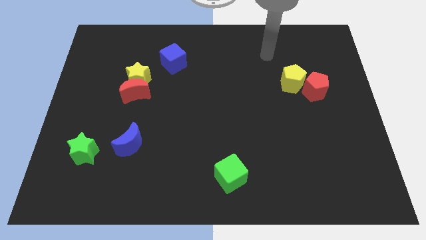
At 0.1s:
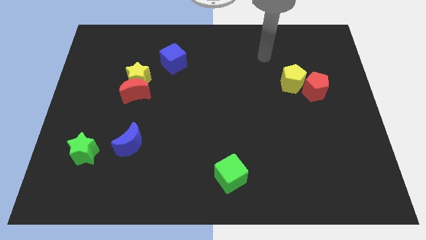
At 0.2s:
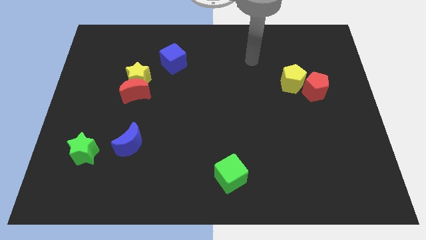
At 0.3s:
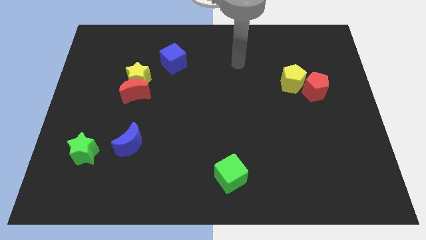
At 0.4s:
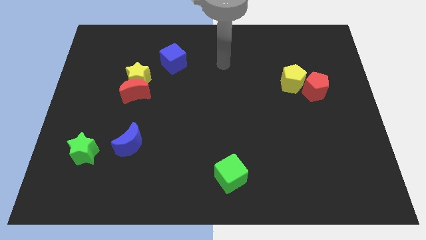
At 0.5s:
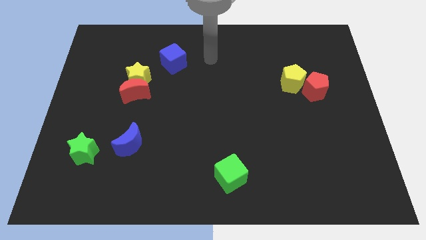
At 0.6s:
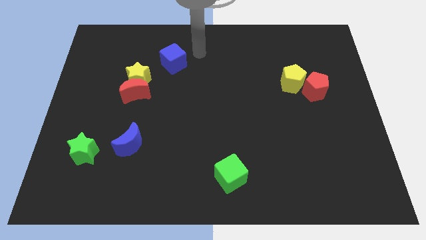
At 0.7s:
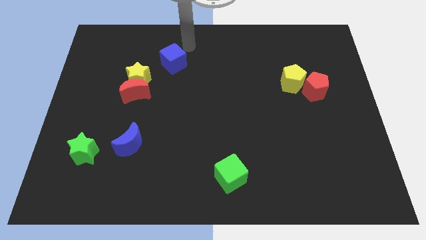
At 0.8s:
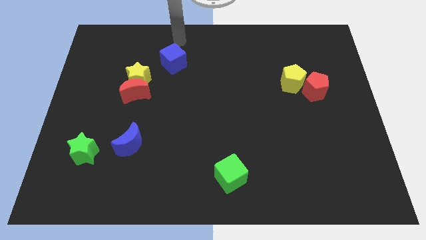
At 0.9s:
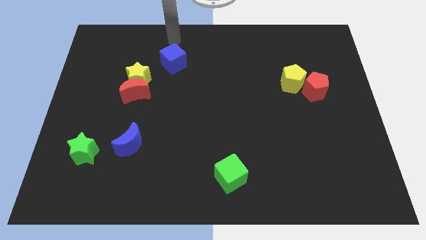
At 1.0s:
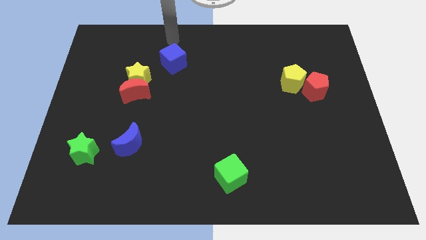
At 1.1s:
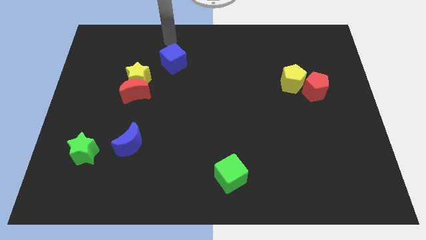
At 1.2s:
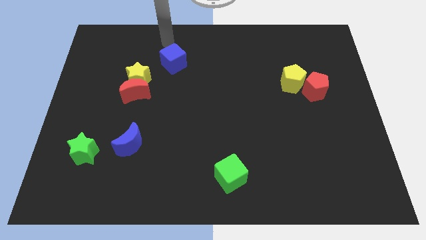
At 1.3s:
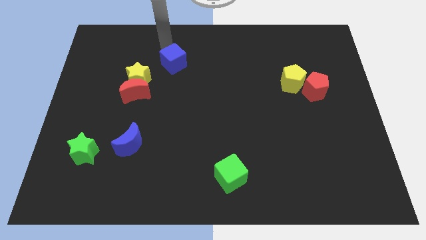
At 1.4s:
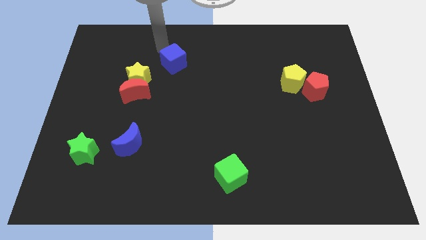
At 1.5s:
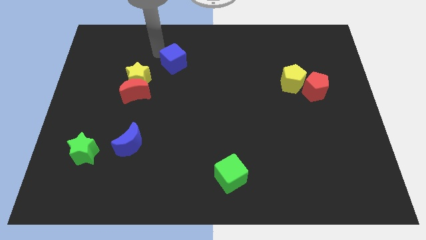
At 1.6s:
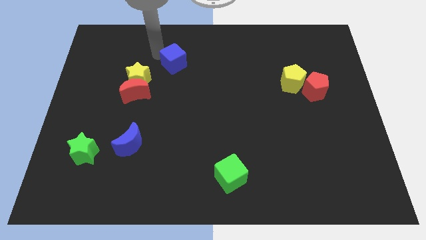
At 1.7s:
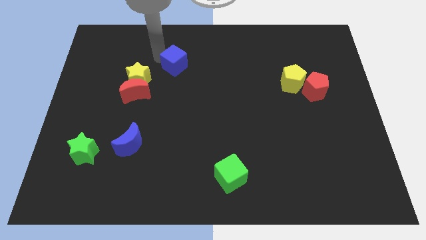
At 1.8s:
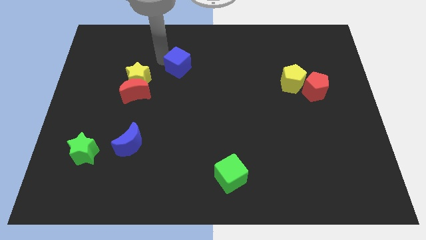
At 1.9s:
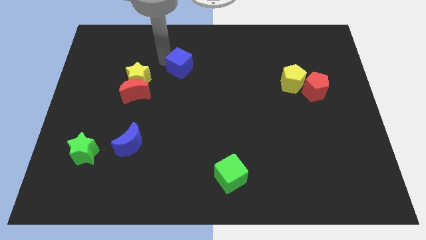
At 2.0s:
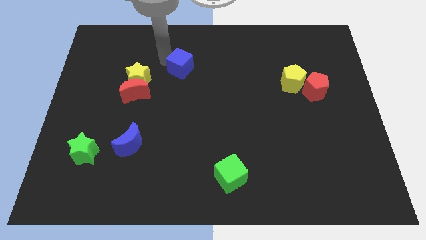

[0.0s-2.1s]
push the blue cube slightly to the down

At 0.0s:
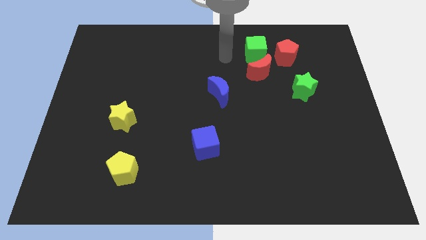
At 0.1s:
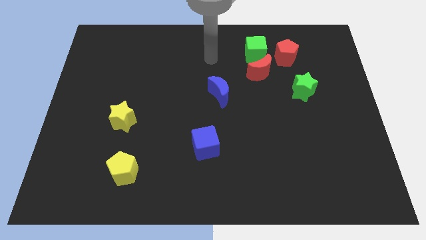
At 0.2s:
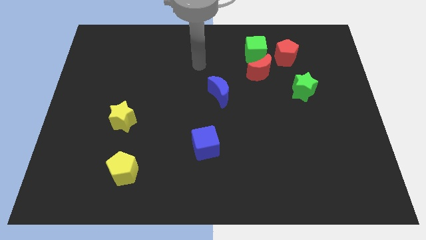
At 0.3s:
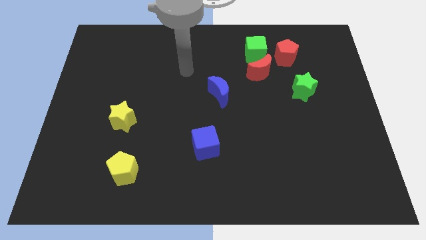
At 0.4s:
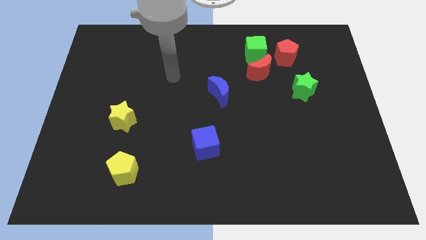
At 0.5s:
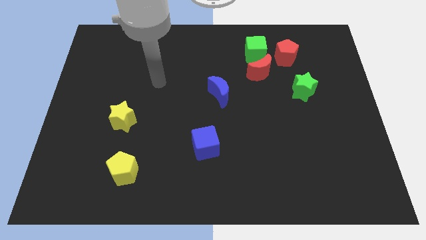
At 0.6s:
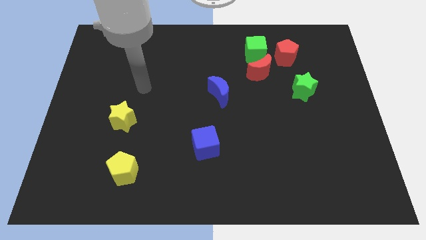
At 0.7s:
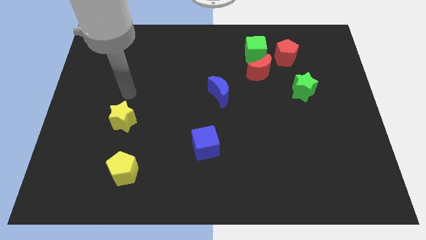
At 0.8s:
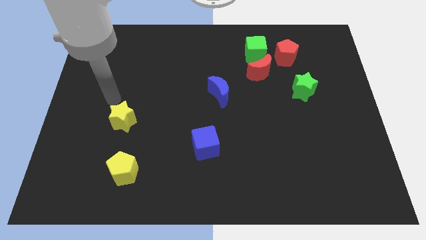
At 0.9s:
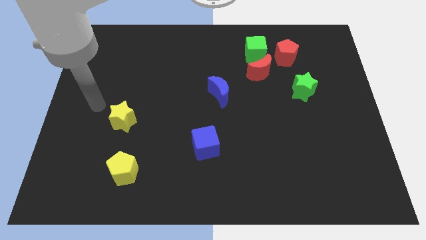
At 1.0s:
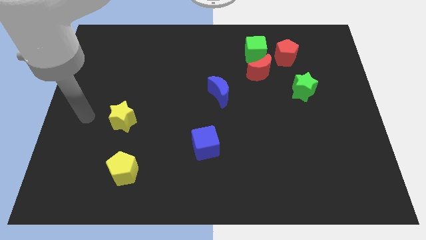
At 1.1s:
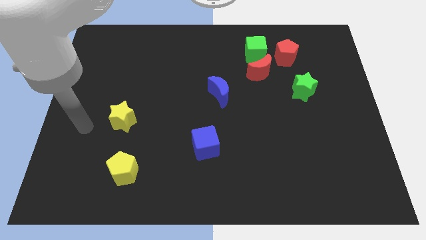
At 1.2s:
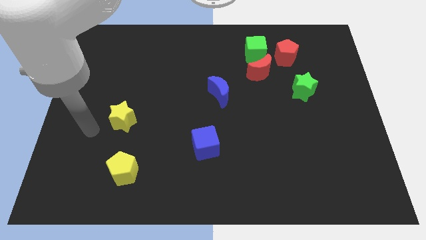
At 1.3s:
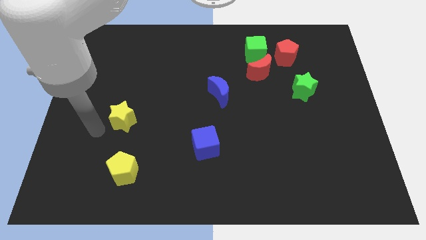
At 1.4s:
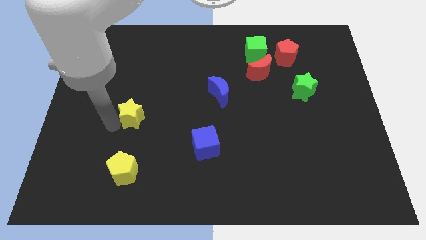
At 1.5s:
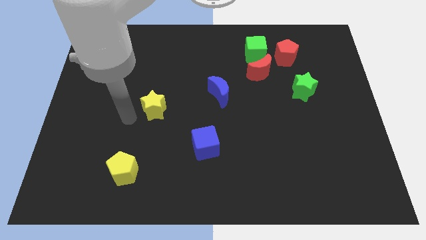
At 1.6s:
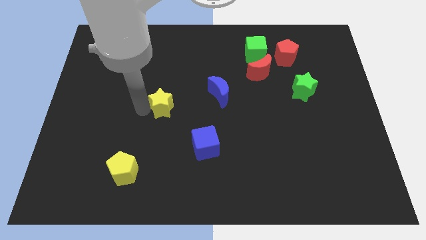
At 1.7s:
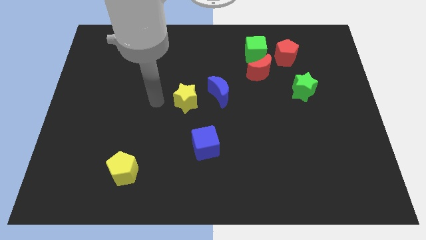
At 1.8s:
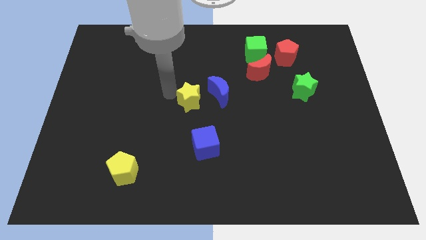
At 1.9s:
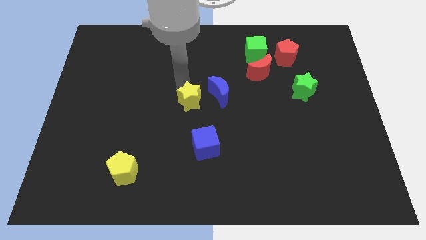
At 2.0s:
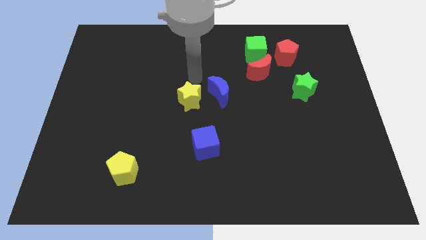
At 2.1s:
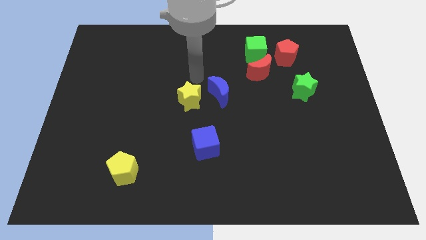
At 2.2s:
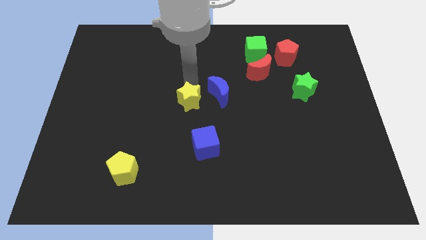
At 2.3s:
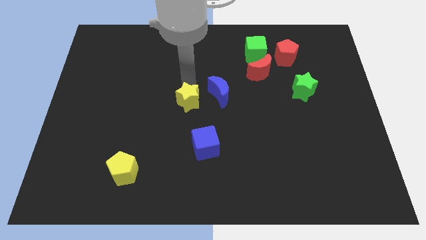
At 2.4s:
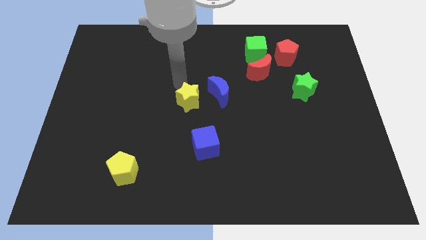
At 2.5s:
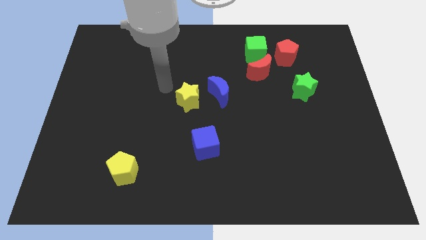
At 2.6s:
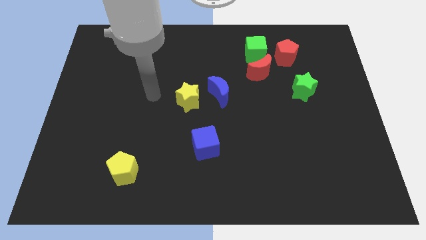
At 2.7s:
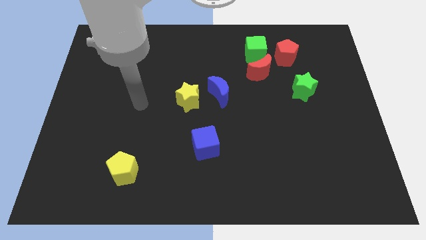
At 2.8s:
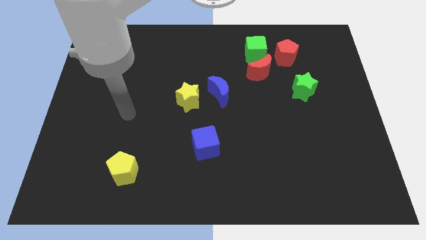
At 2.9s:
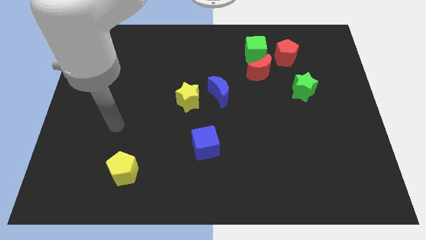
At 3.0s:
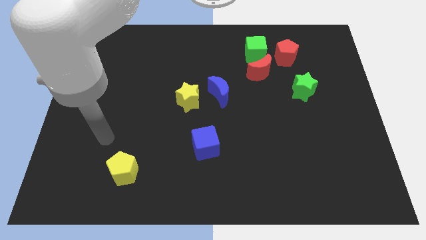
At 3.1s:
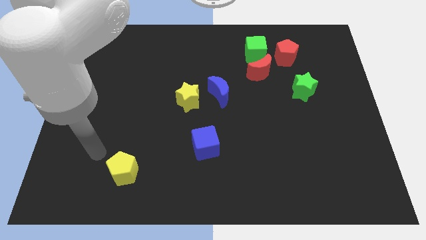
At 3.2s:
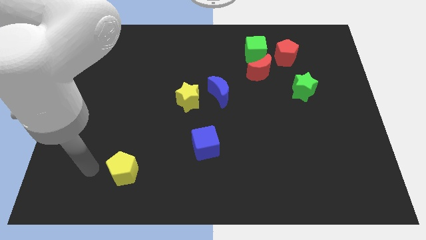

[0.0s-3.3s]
move the yellow star to the left of the blue moon

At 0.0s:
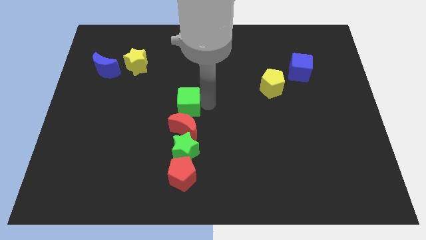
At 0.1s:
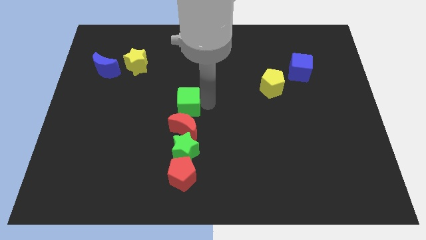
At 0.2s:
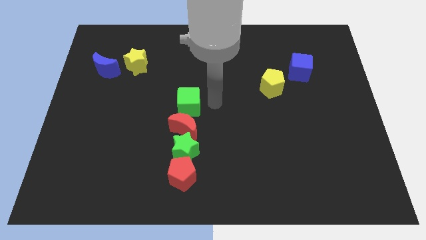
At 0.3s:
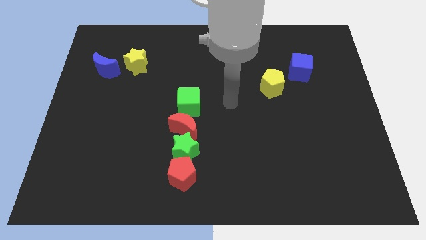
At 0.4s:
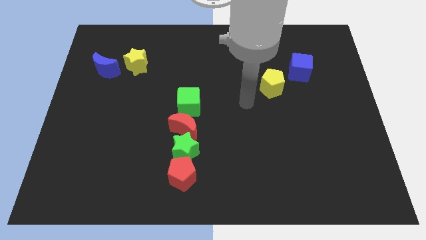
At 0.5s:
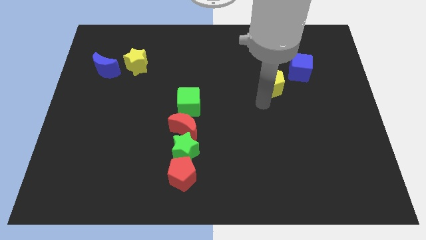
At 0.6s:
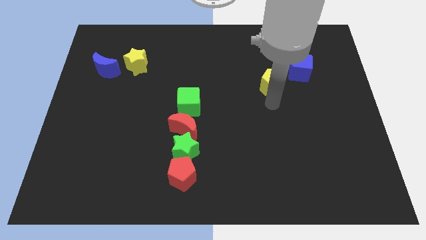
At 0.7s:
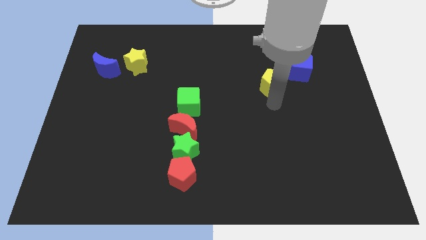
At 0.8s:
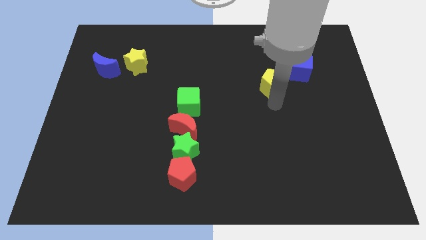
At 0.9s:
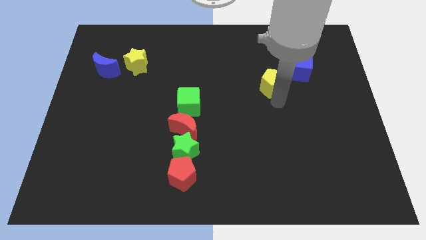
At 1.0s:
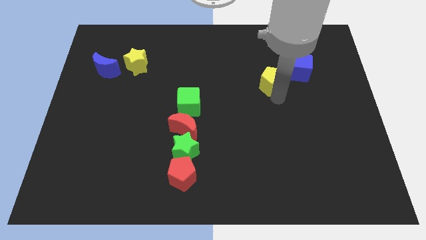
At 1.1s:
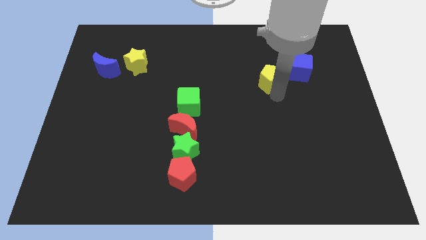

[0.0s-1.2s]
go away from the green cube

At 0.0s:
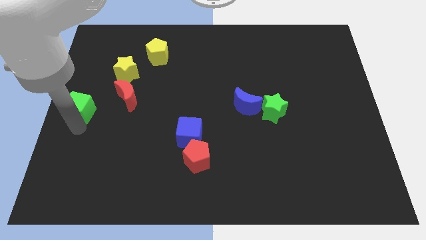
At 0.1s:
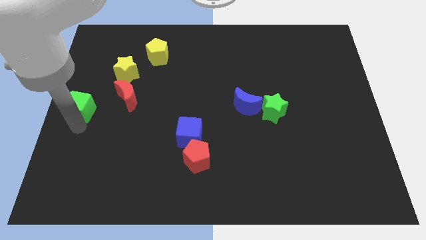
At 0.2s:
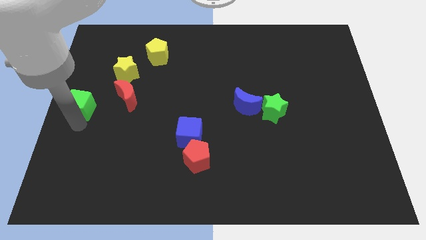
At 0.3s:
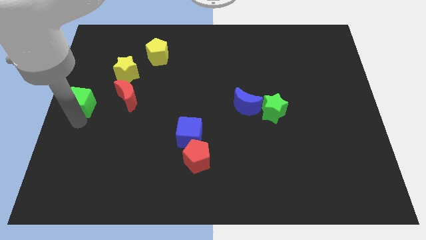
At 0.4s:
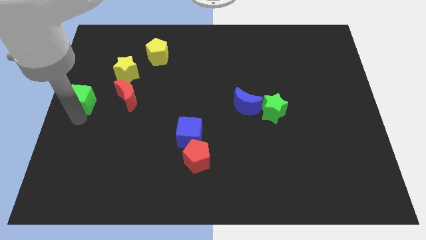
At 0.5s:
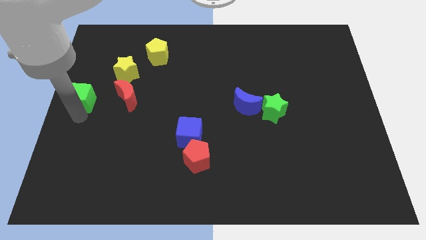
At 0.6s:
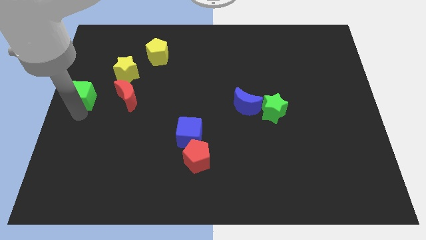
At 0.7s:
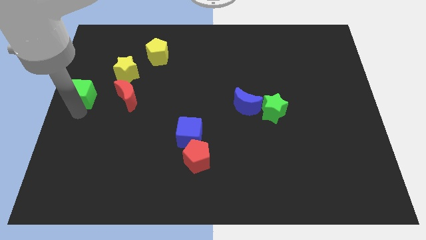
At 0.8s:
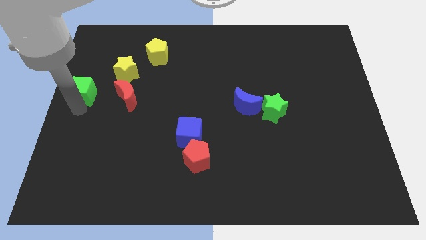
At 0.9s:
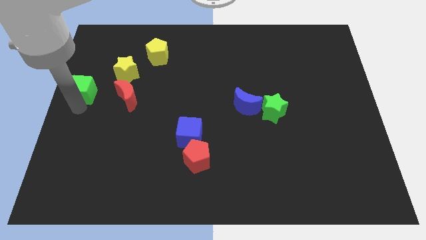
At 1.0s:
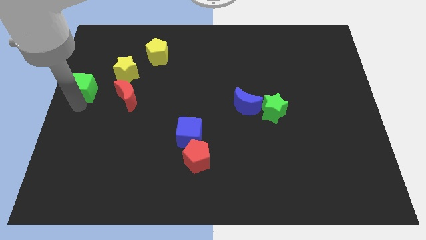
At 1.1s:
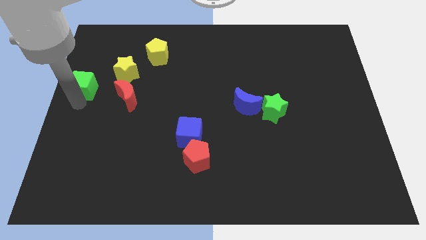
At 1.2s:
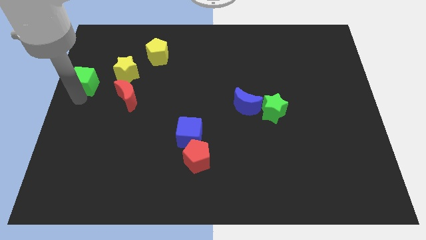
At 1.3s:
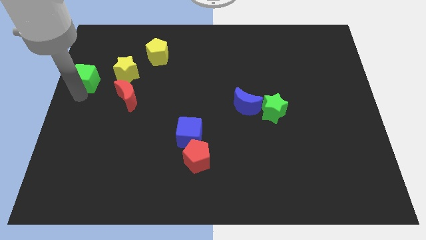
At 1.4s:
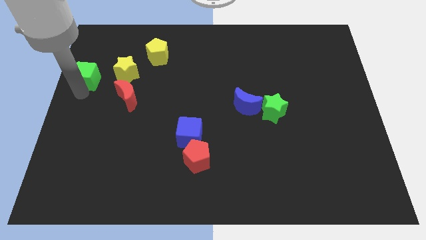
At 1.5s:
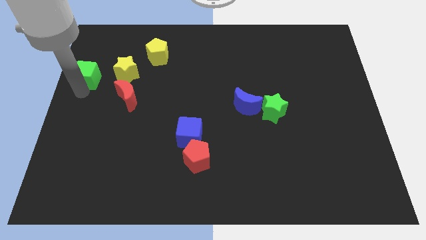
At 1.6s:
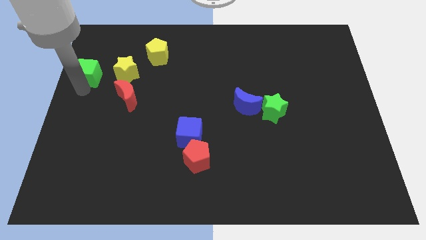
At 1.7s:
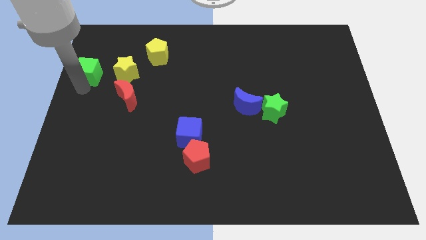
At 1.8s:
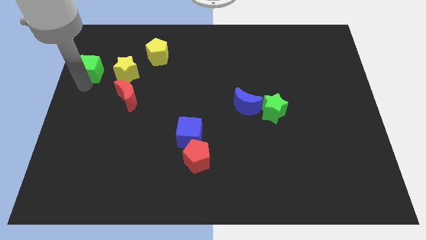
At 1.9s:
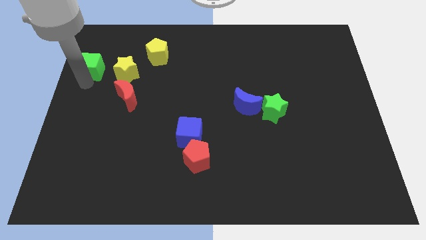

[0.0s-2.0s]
put the green cube left to the yellow star

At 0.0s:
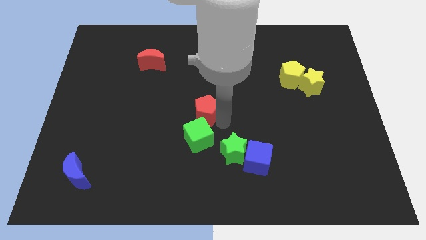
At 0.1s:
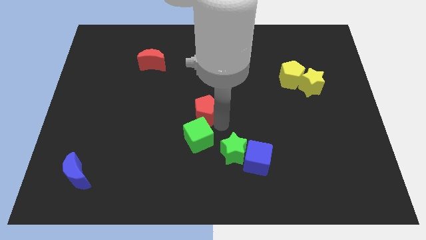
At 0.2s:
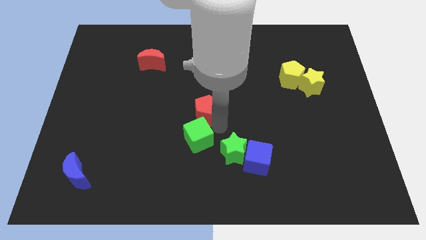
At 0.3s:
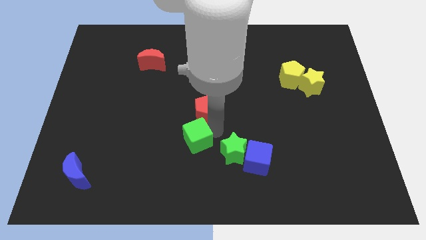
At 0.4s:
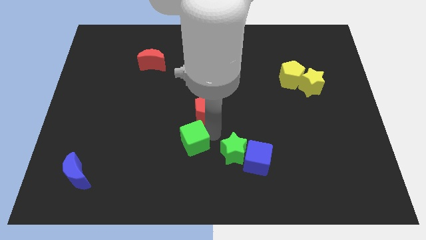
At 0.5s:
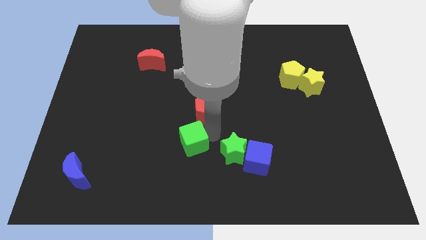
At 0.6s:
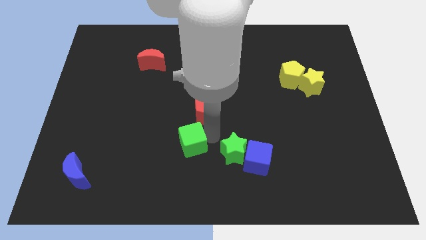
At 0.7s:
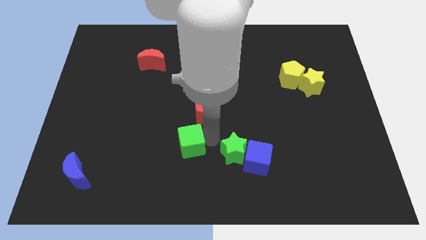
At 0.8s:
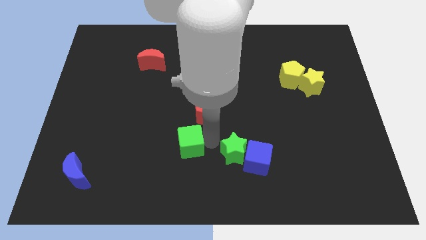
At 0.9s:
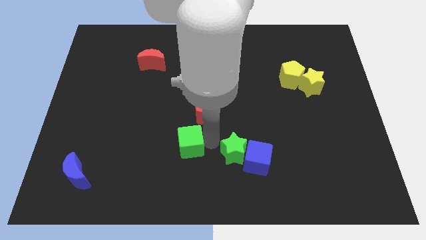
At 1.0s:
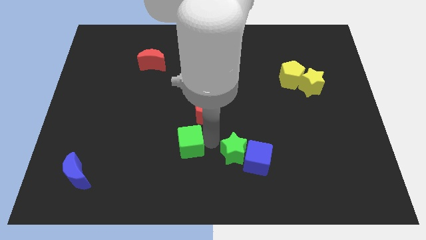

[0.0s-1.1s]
slightly push the green cube towards the left side of the board
